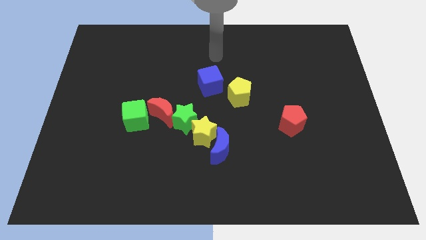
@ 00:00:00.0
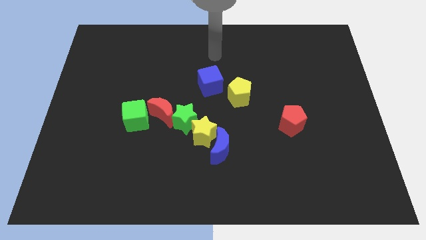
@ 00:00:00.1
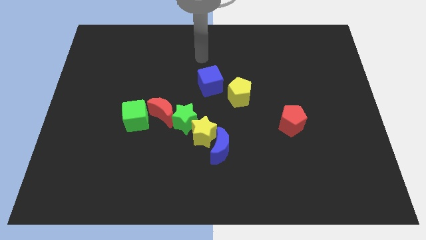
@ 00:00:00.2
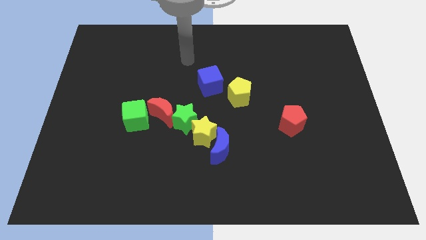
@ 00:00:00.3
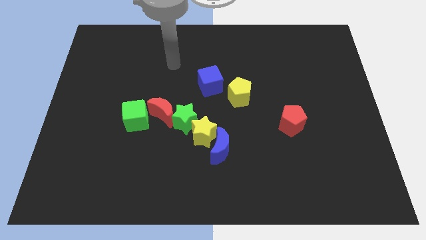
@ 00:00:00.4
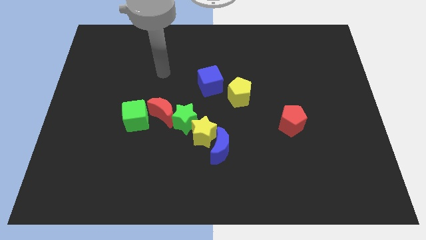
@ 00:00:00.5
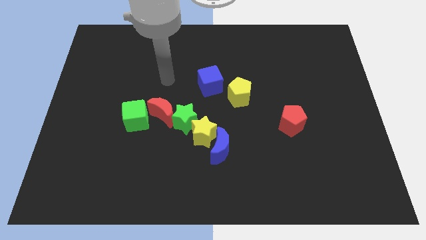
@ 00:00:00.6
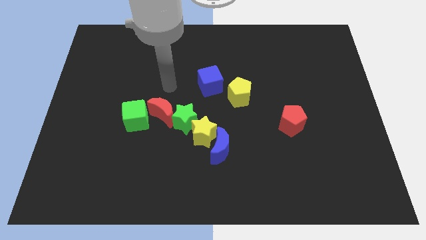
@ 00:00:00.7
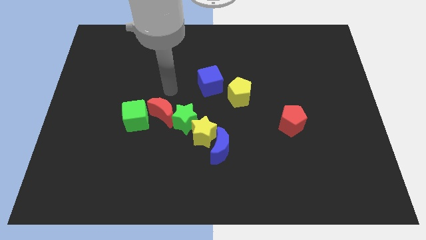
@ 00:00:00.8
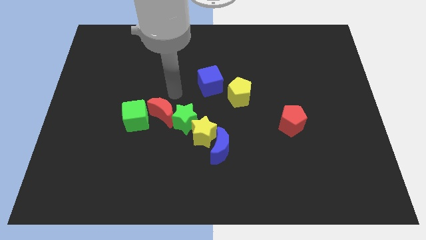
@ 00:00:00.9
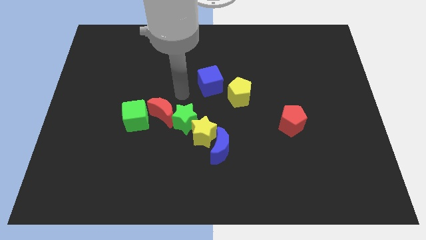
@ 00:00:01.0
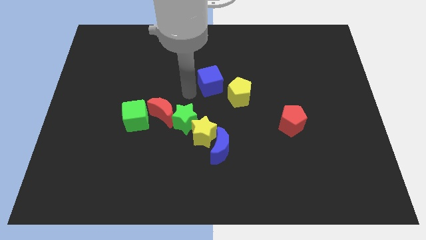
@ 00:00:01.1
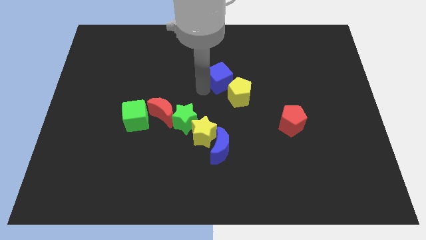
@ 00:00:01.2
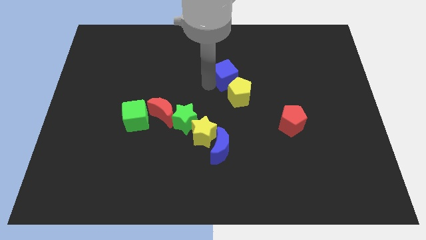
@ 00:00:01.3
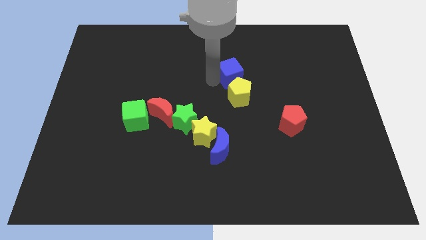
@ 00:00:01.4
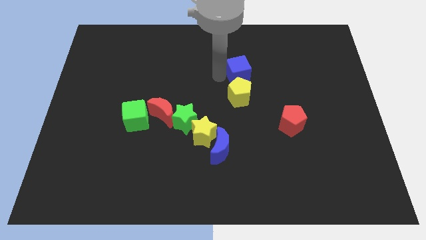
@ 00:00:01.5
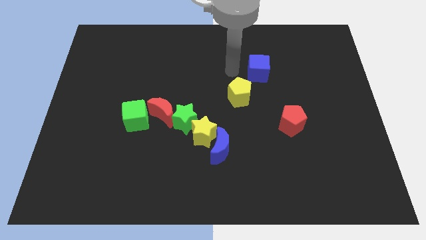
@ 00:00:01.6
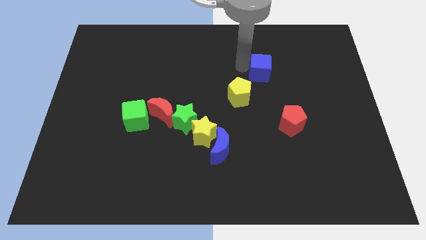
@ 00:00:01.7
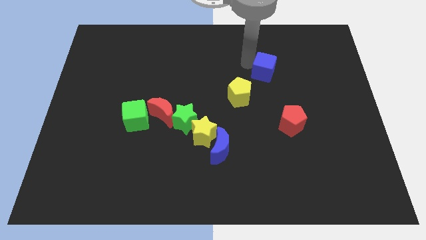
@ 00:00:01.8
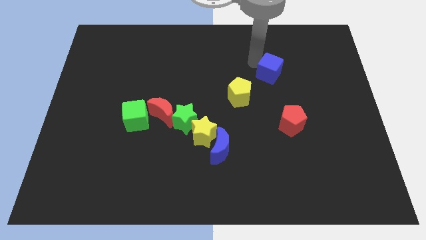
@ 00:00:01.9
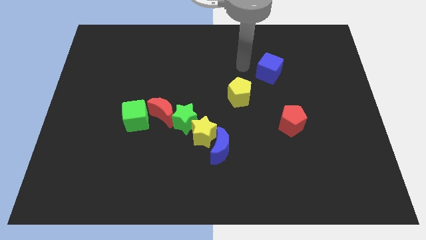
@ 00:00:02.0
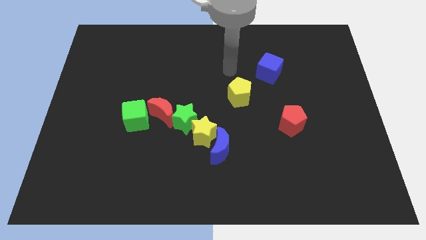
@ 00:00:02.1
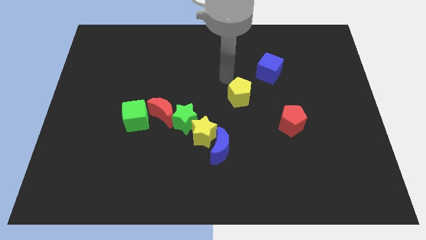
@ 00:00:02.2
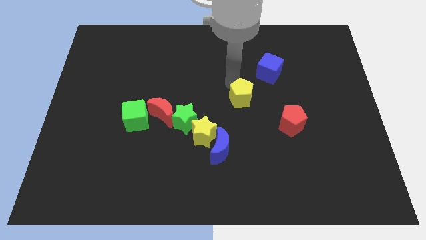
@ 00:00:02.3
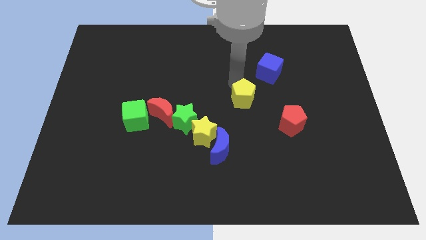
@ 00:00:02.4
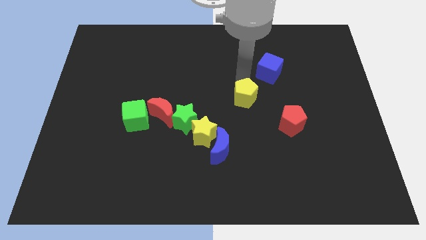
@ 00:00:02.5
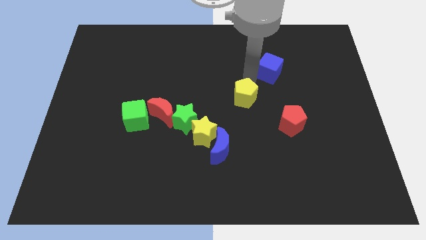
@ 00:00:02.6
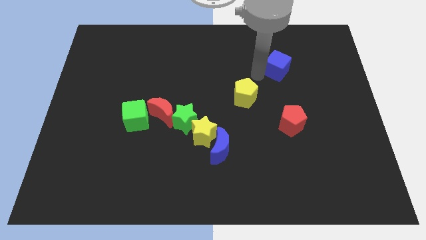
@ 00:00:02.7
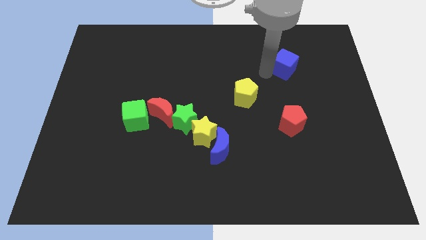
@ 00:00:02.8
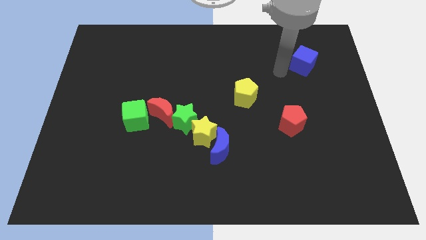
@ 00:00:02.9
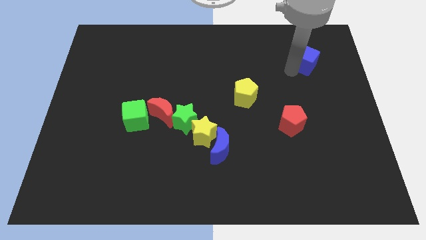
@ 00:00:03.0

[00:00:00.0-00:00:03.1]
take the blue cube towards the top right corner

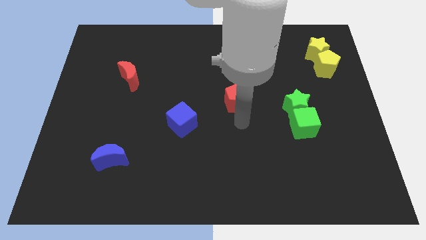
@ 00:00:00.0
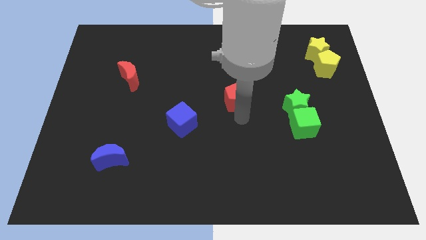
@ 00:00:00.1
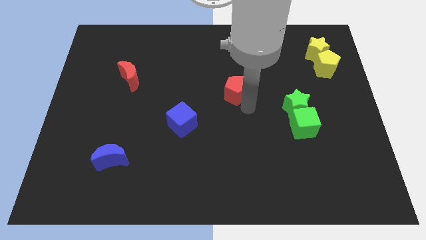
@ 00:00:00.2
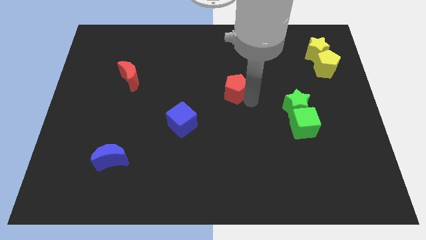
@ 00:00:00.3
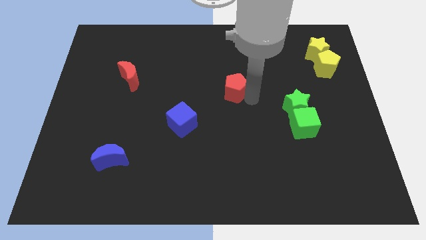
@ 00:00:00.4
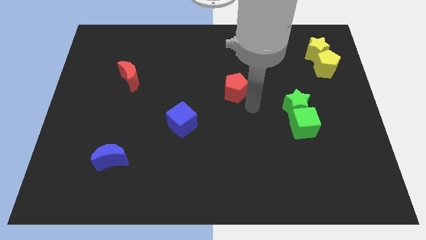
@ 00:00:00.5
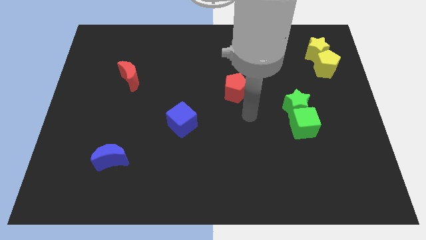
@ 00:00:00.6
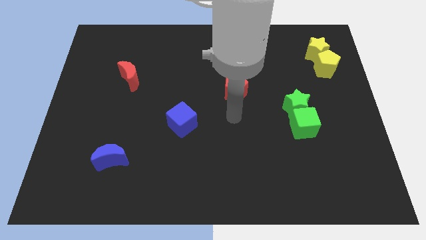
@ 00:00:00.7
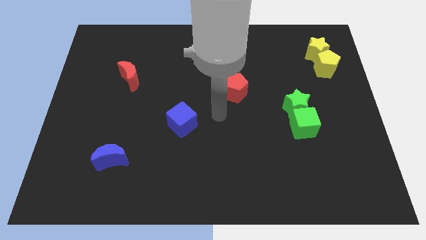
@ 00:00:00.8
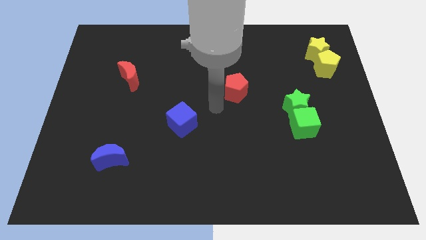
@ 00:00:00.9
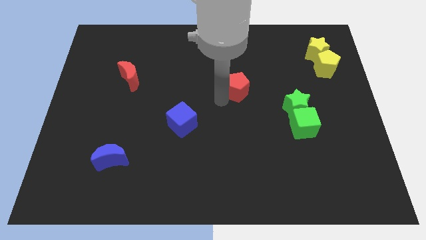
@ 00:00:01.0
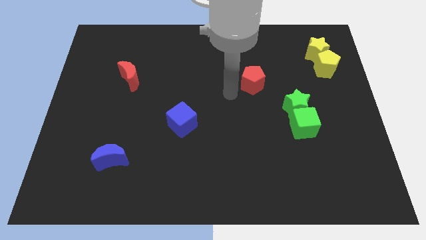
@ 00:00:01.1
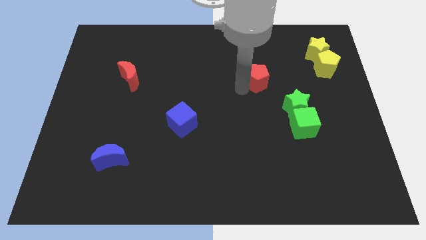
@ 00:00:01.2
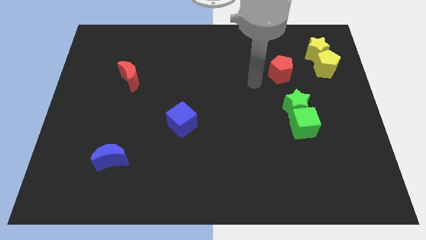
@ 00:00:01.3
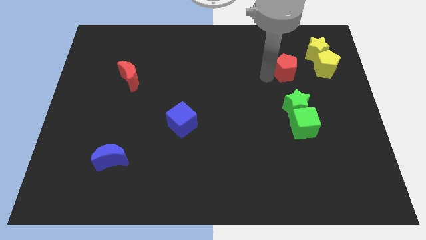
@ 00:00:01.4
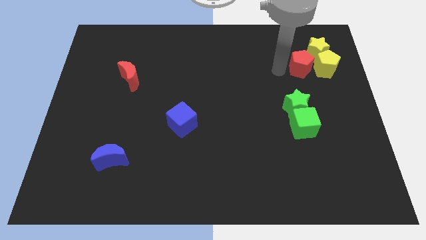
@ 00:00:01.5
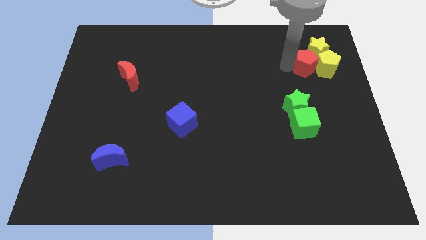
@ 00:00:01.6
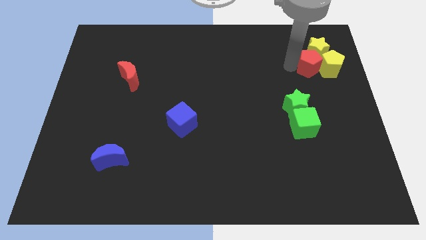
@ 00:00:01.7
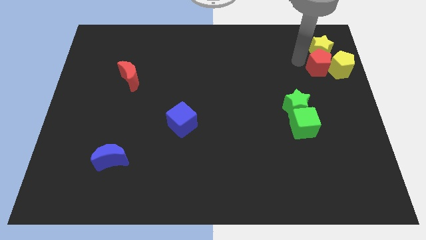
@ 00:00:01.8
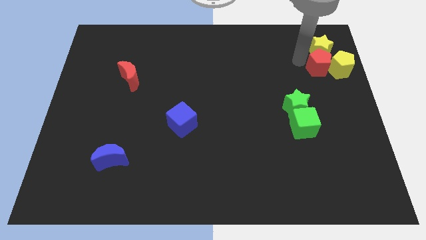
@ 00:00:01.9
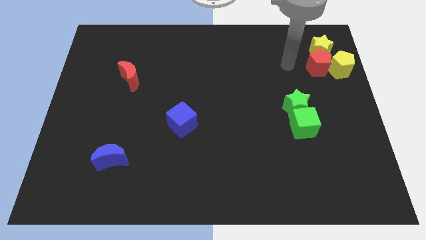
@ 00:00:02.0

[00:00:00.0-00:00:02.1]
slide the red pentagon towards the left of the yellow blocks

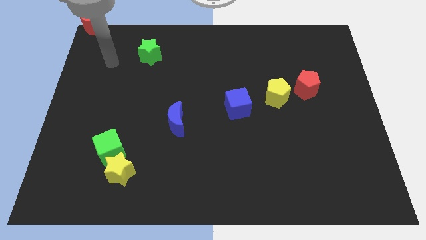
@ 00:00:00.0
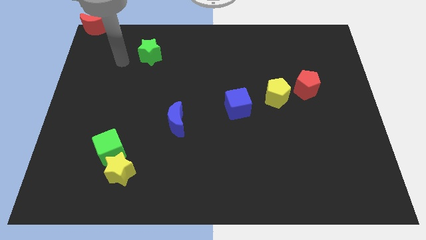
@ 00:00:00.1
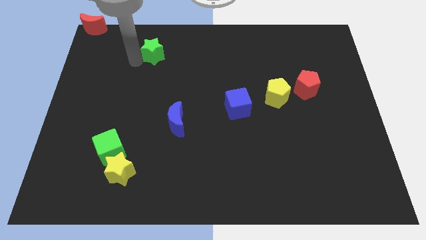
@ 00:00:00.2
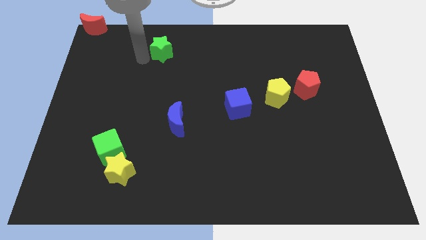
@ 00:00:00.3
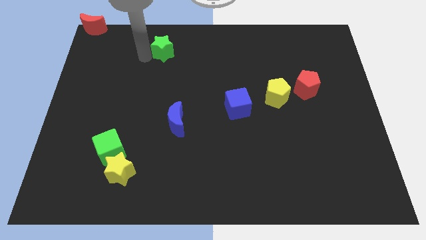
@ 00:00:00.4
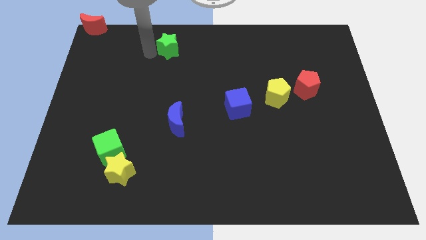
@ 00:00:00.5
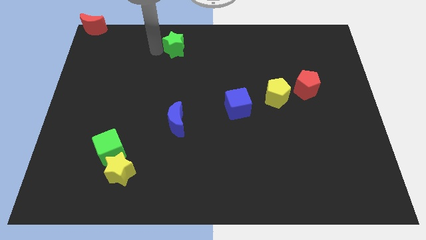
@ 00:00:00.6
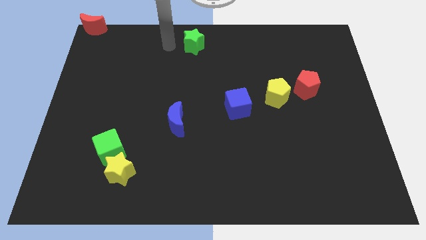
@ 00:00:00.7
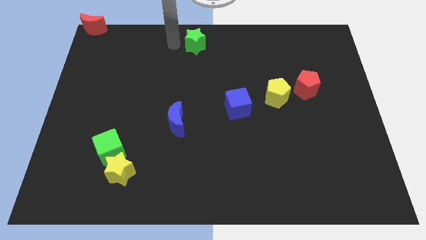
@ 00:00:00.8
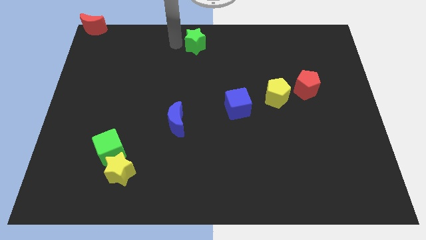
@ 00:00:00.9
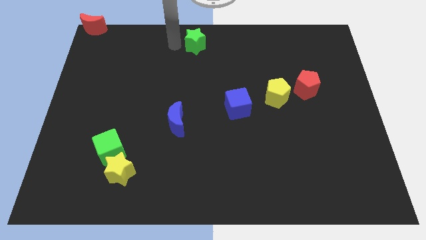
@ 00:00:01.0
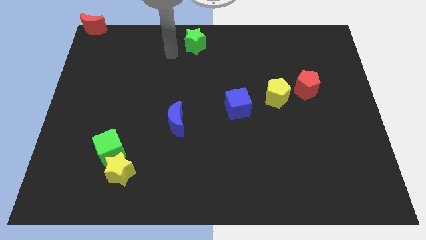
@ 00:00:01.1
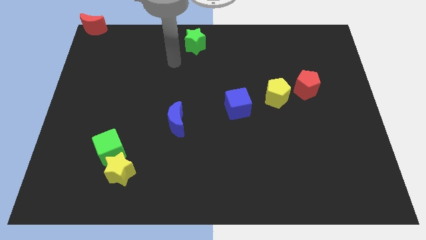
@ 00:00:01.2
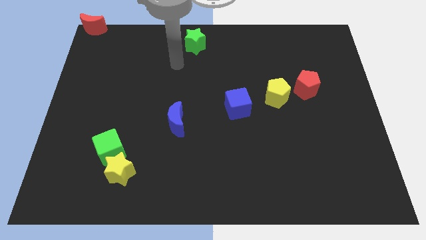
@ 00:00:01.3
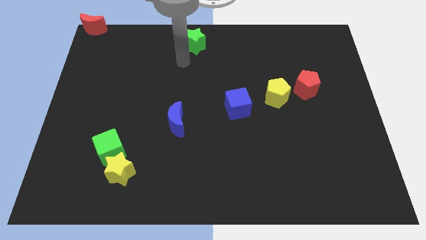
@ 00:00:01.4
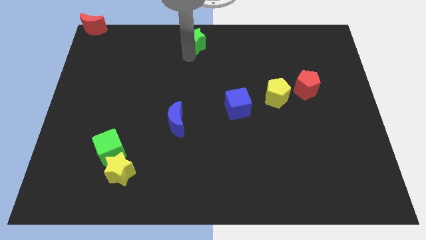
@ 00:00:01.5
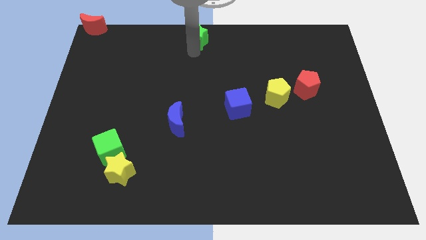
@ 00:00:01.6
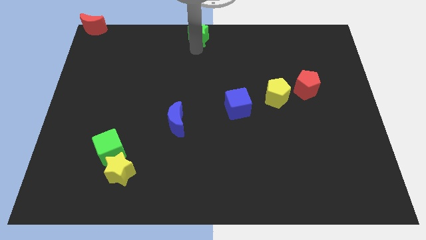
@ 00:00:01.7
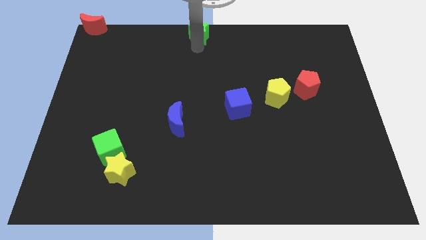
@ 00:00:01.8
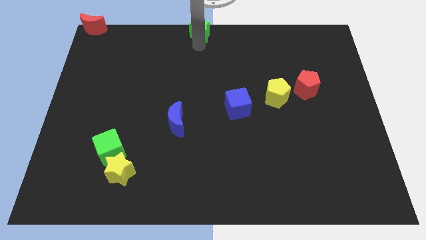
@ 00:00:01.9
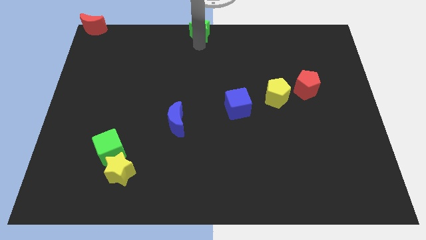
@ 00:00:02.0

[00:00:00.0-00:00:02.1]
push the green star to the top middle of the board

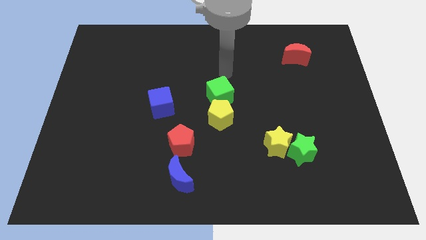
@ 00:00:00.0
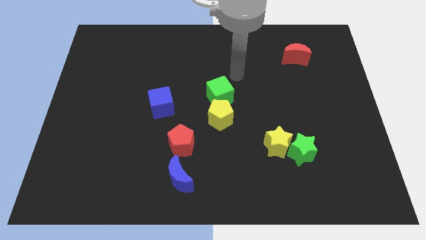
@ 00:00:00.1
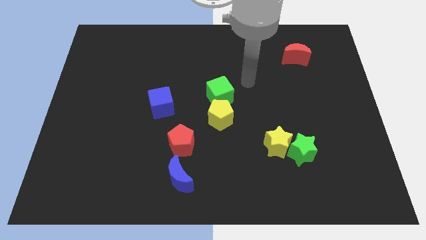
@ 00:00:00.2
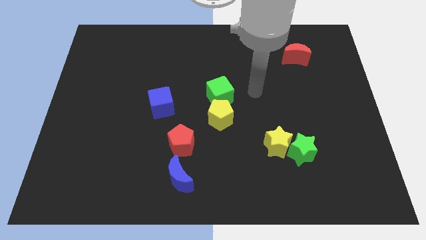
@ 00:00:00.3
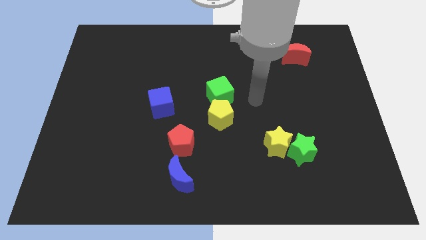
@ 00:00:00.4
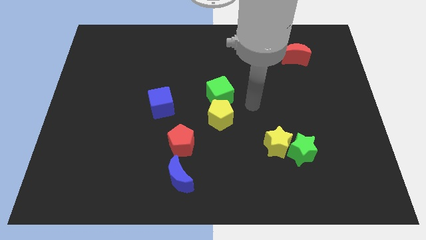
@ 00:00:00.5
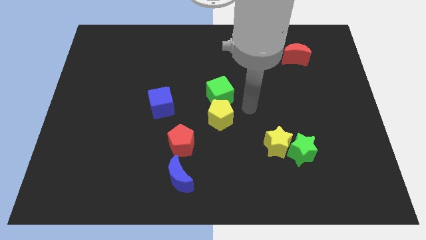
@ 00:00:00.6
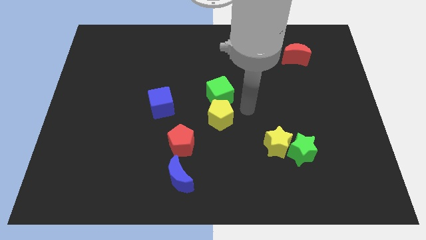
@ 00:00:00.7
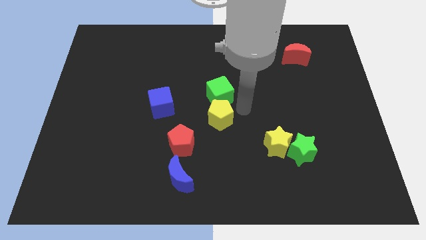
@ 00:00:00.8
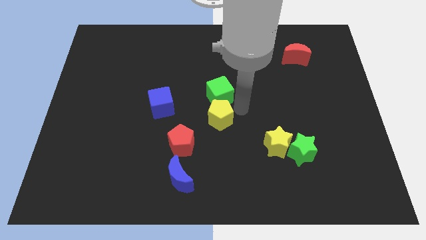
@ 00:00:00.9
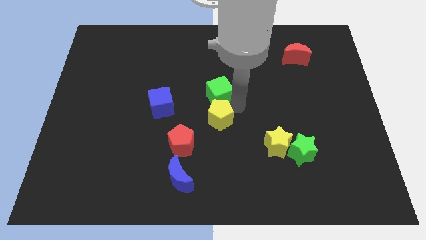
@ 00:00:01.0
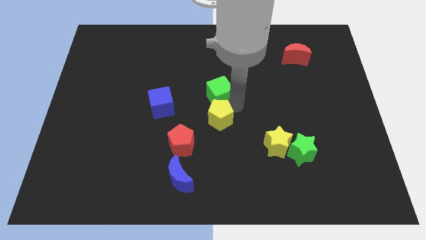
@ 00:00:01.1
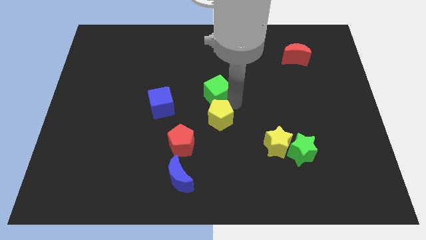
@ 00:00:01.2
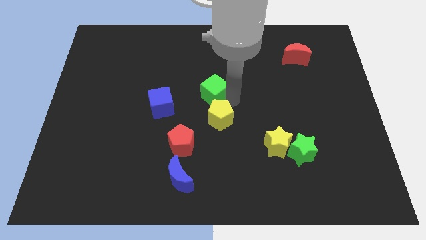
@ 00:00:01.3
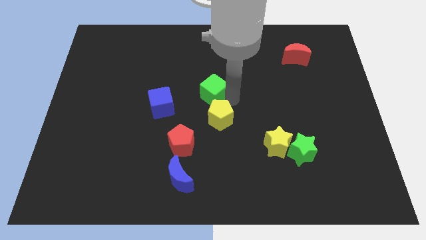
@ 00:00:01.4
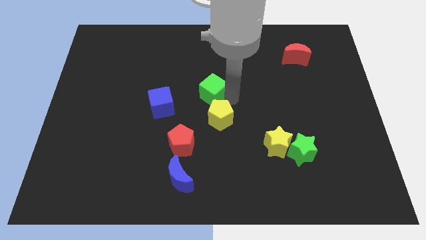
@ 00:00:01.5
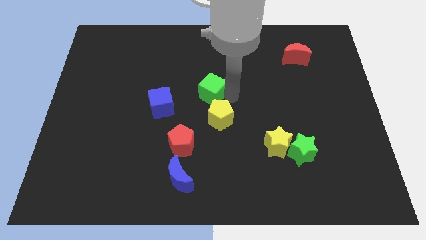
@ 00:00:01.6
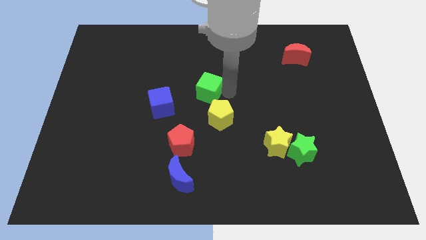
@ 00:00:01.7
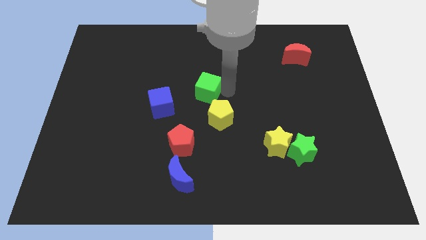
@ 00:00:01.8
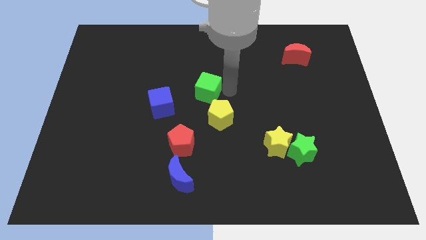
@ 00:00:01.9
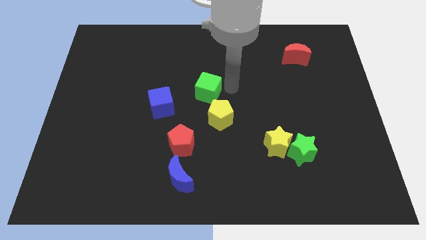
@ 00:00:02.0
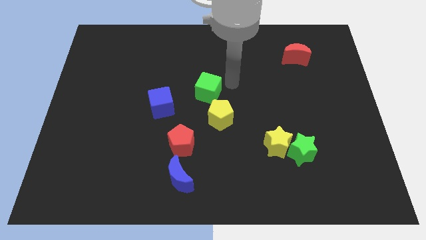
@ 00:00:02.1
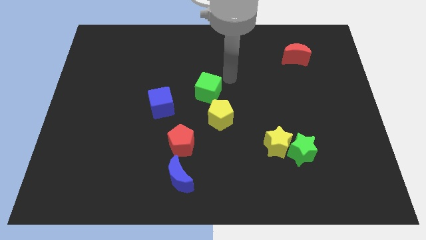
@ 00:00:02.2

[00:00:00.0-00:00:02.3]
separate green cube from the yellow pentagon
